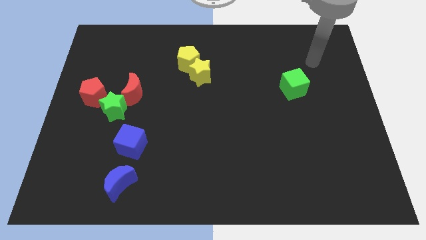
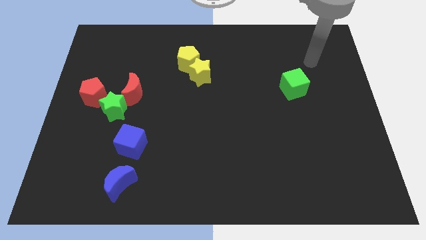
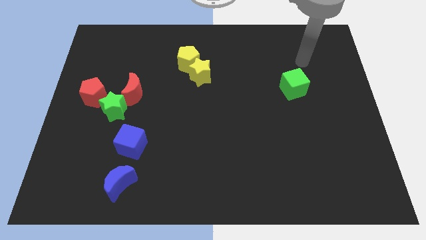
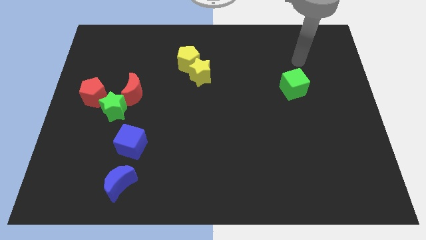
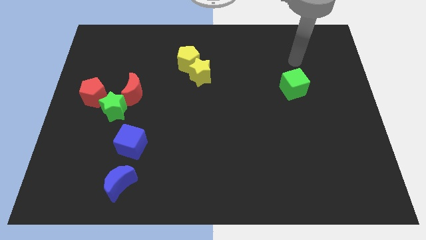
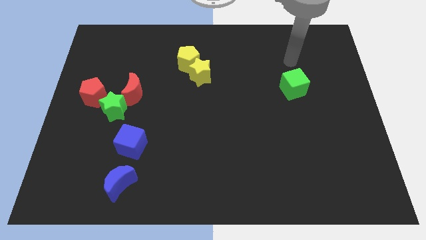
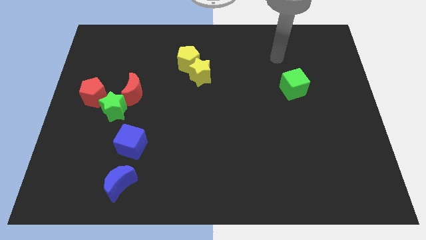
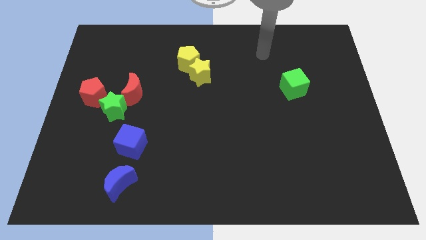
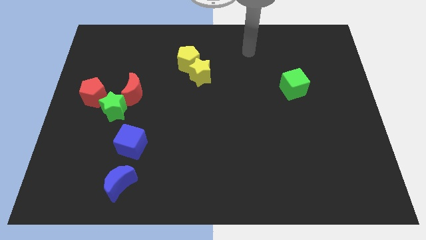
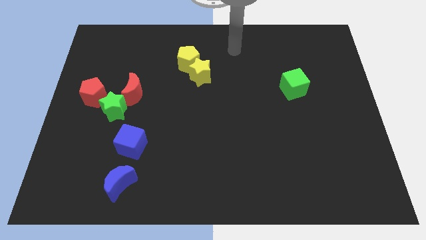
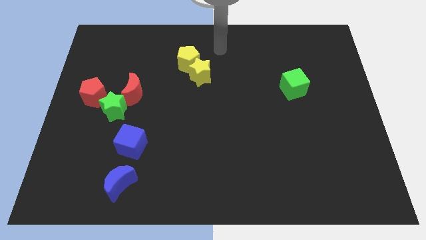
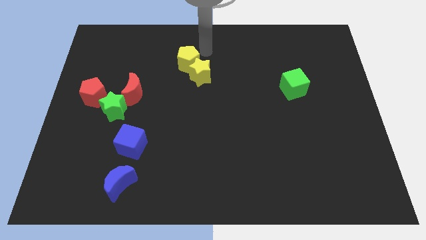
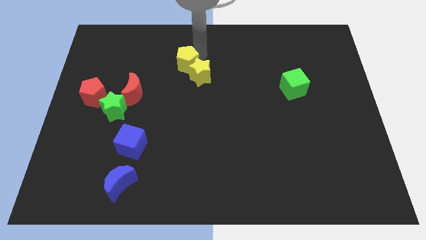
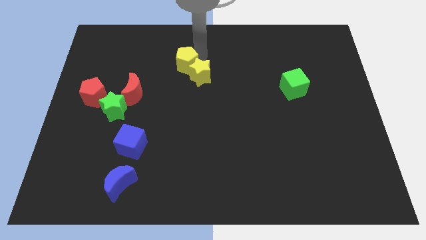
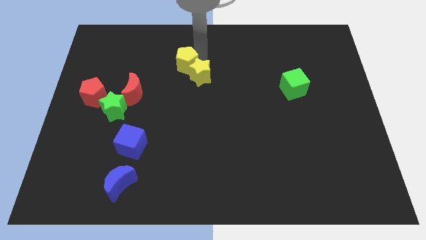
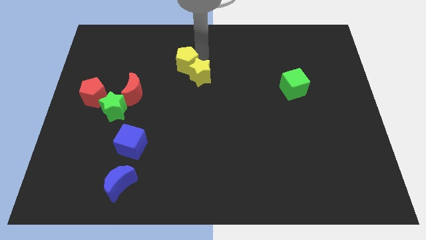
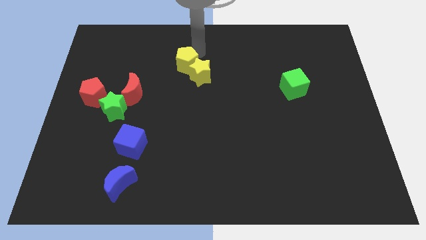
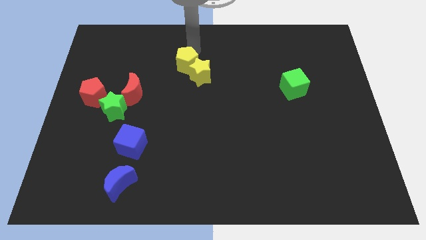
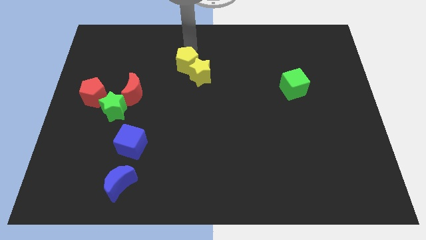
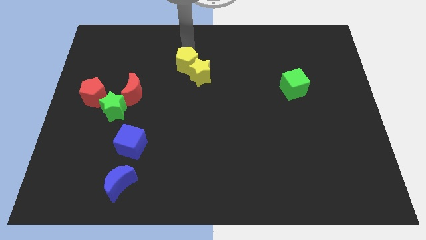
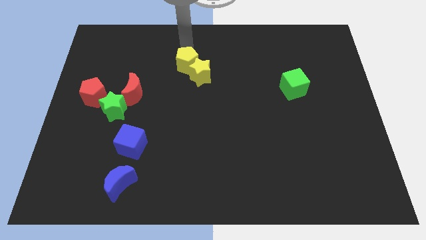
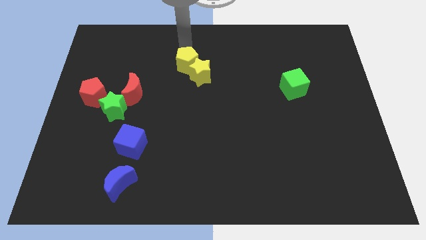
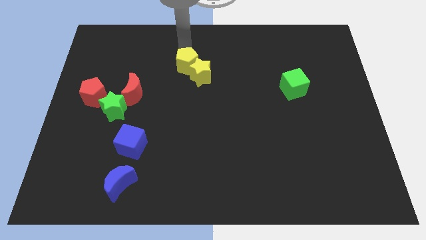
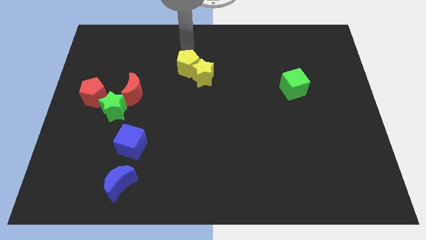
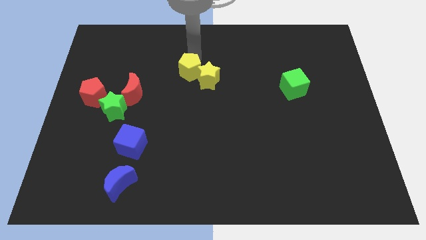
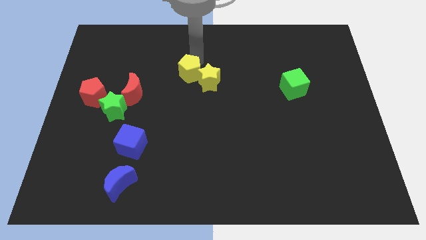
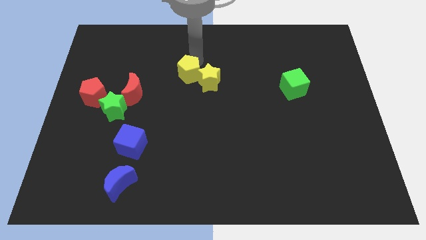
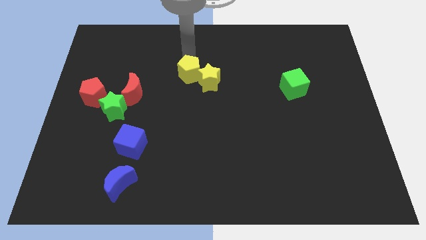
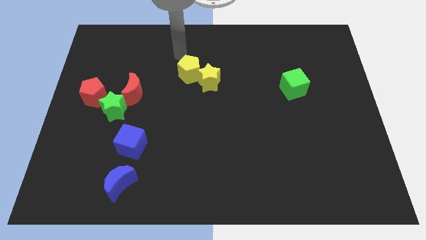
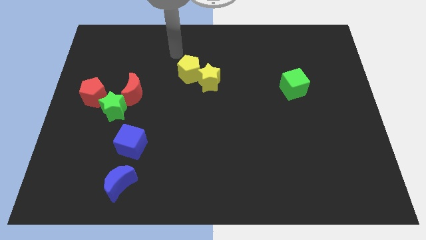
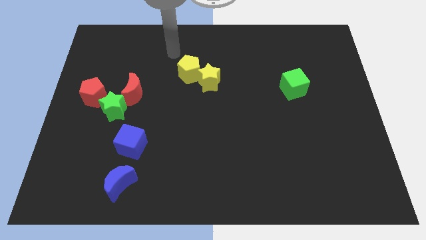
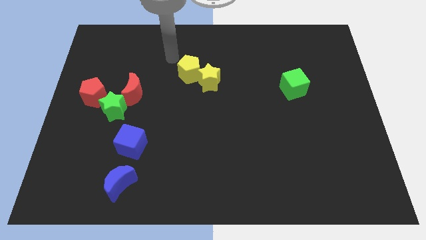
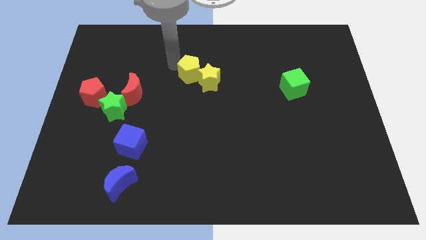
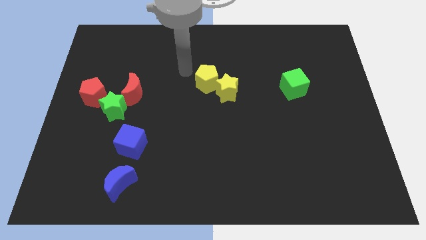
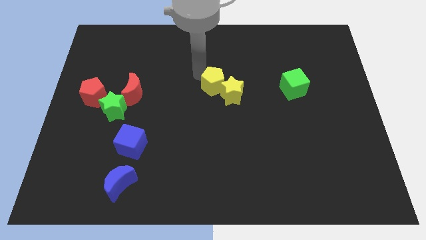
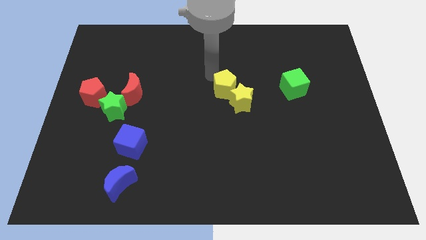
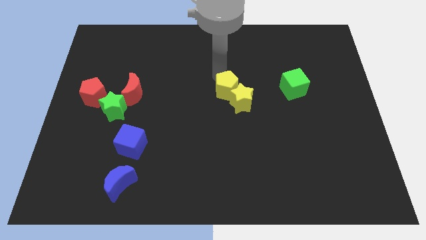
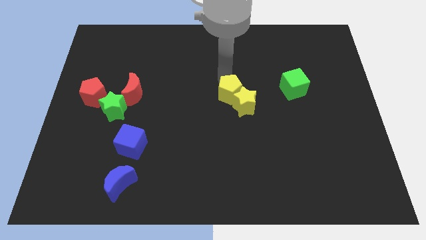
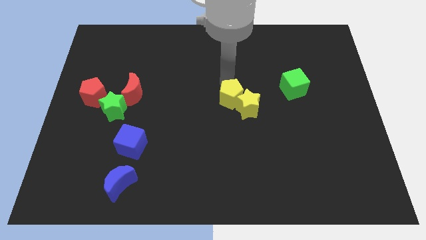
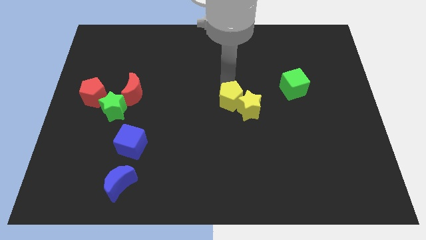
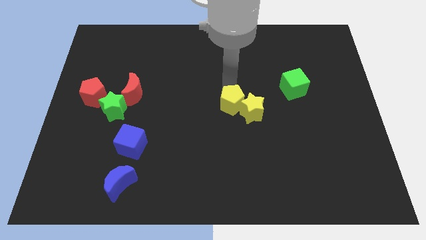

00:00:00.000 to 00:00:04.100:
move the yellow pentagon into the yellow star to the center of the board

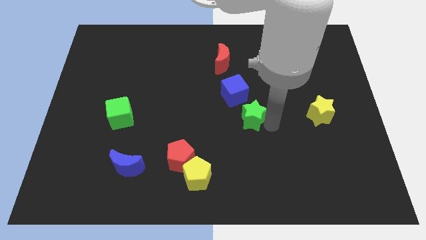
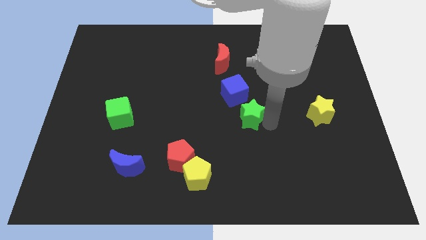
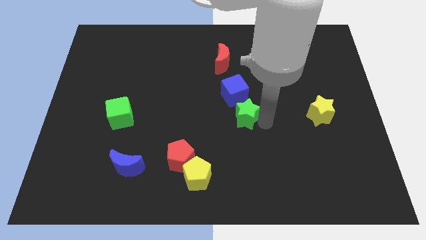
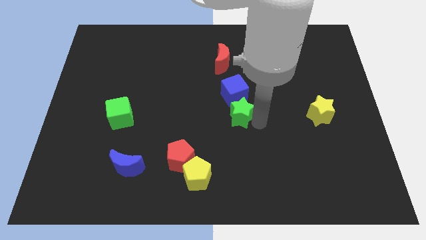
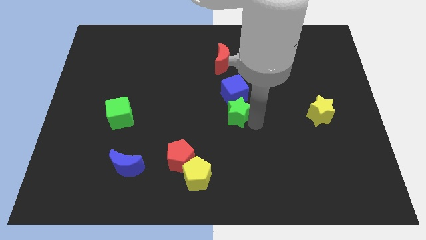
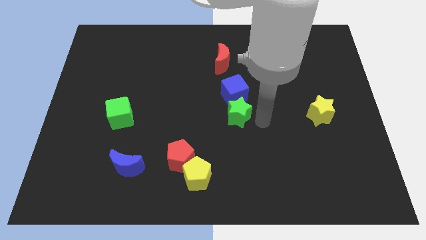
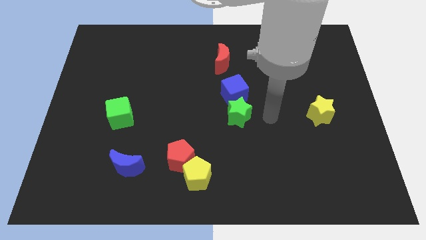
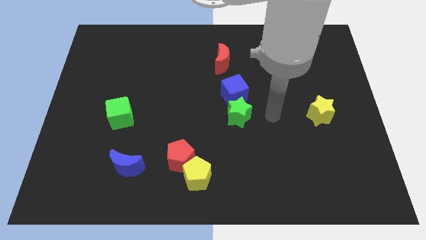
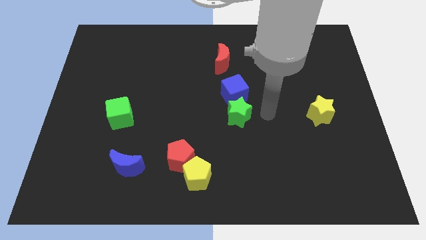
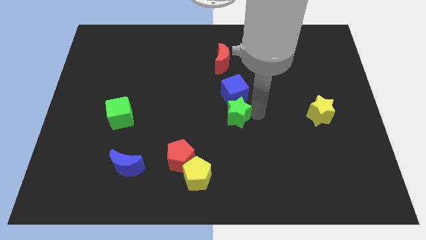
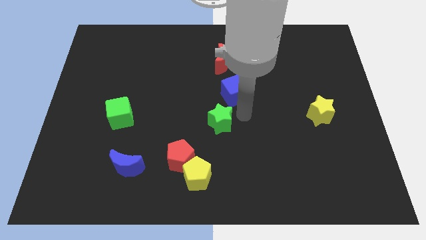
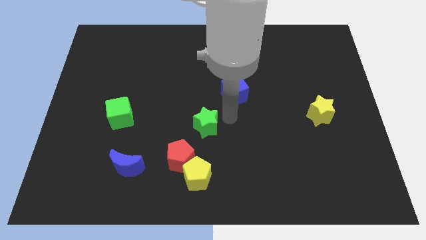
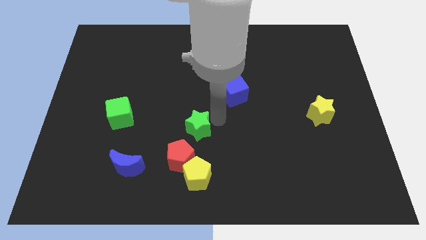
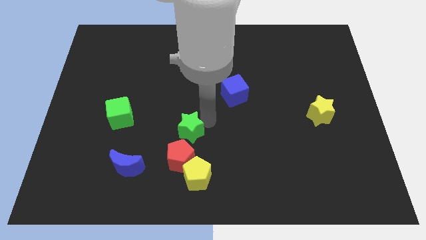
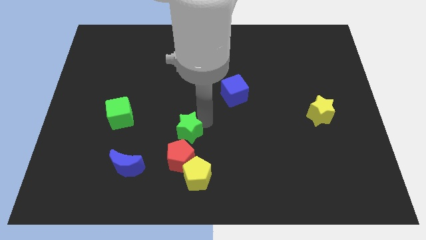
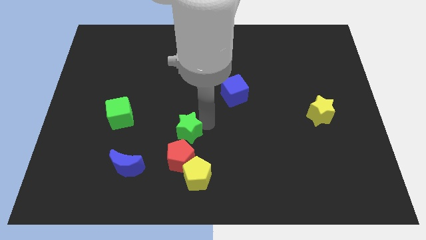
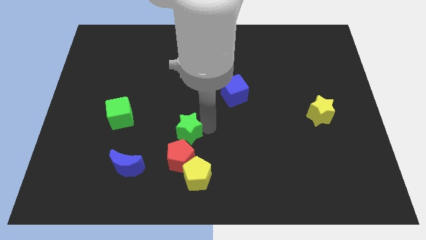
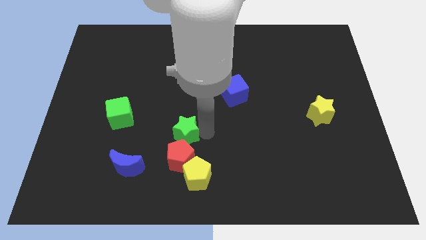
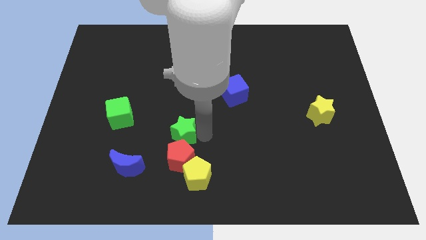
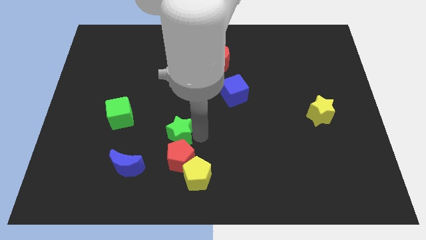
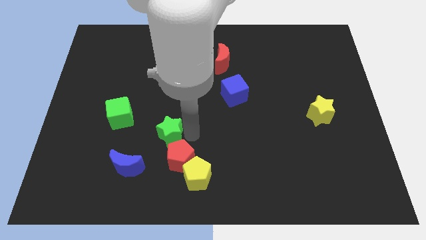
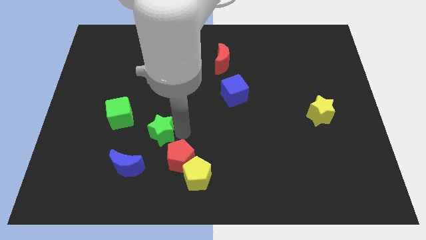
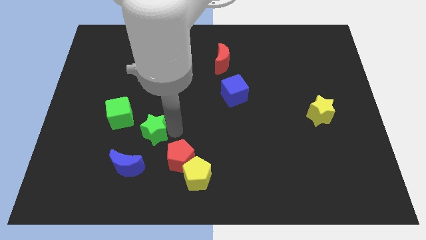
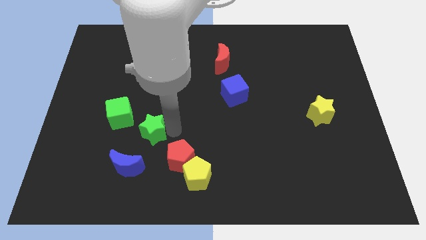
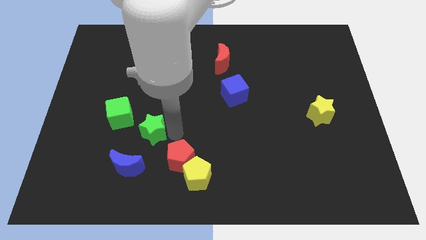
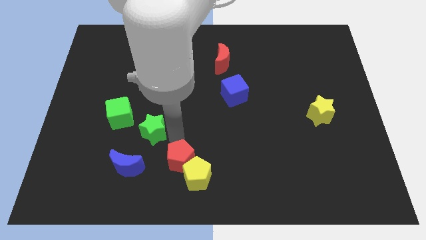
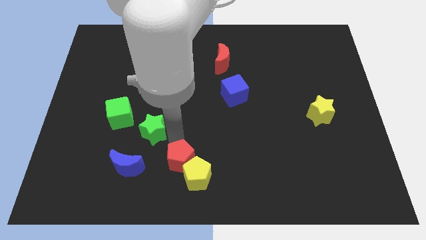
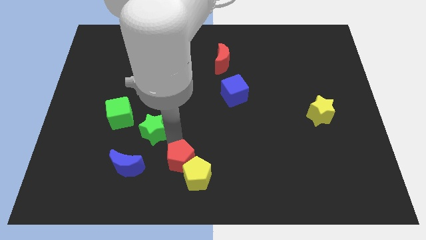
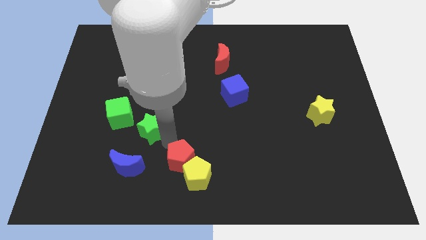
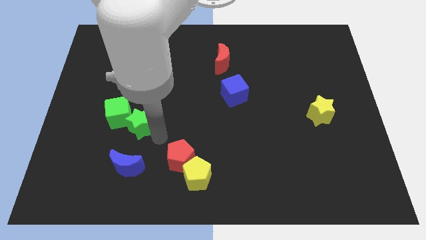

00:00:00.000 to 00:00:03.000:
move the green star close to green cube

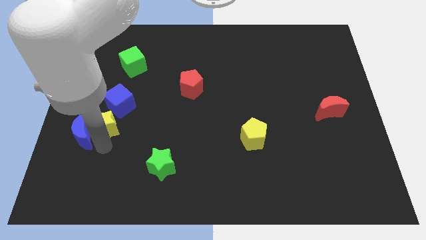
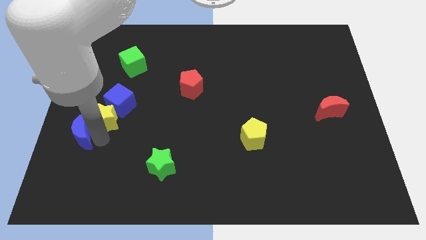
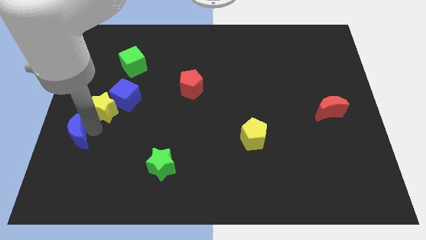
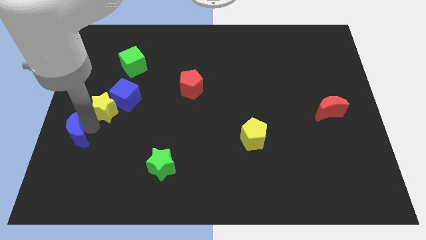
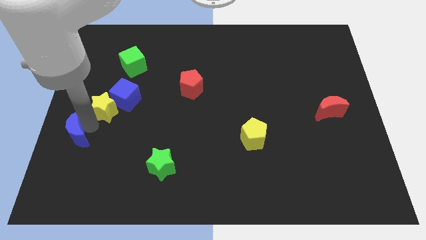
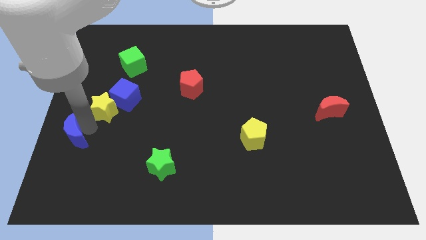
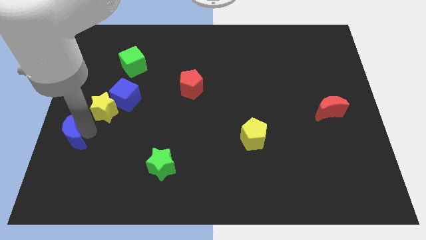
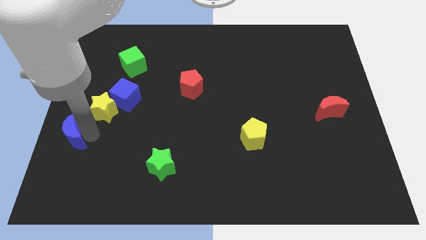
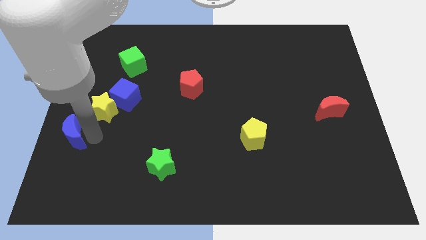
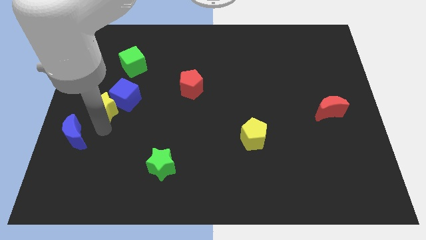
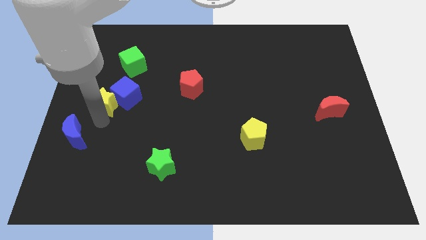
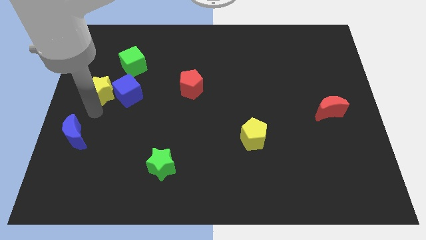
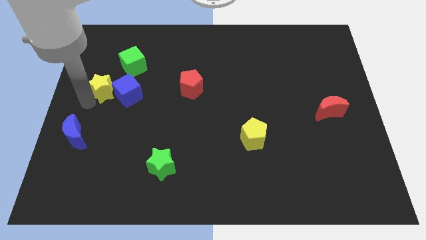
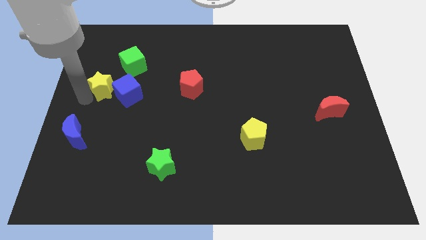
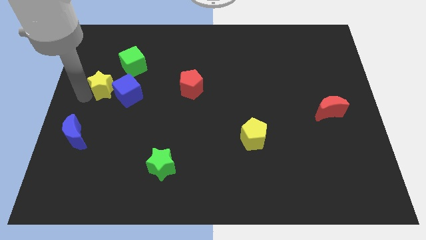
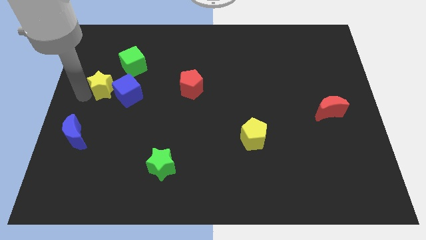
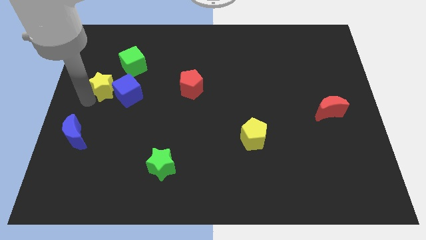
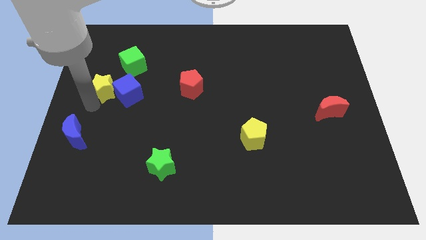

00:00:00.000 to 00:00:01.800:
place the yellow star diagonally to the top left of the blue cube

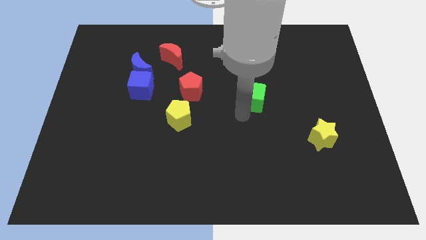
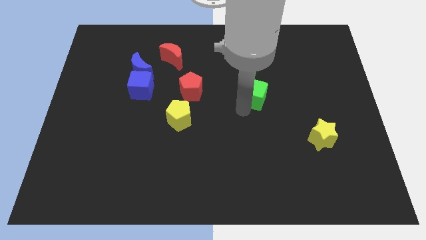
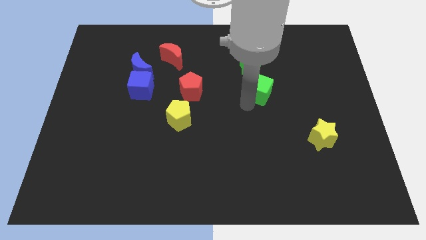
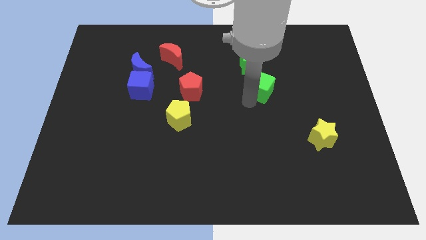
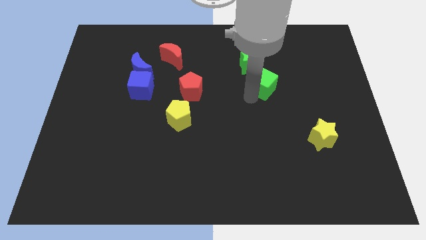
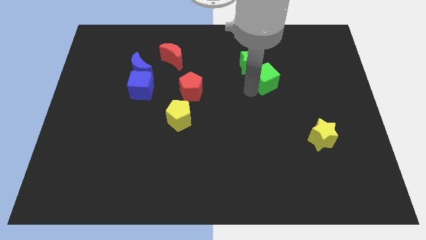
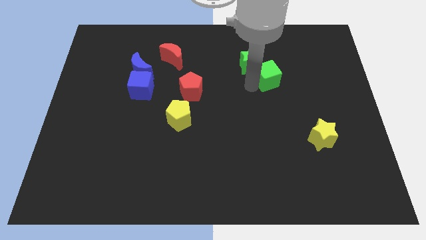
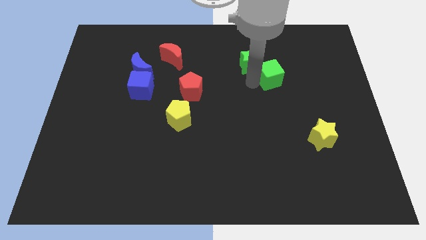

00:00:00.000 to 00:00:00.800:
push green cube upwards
